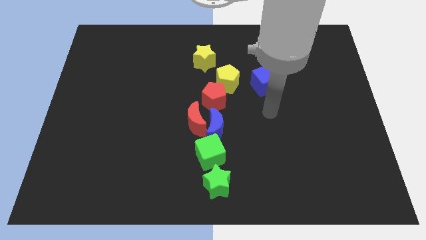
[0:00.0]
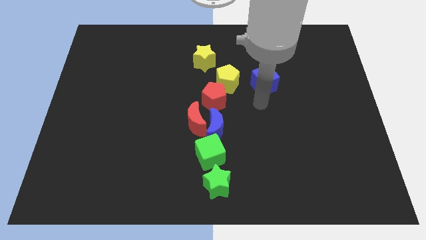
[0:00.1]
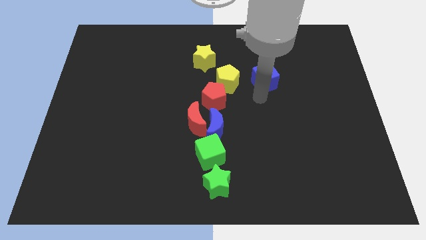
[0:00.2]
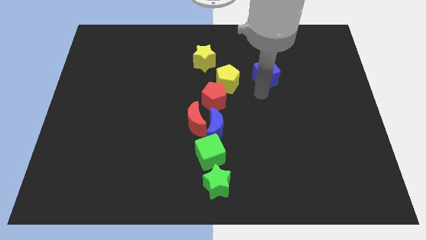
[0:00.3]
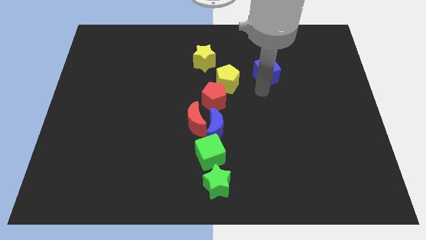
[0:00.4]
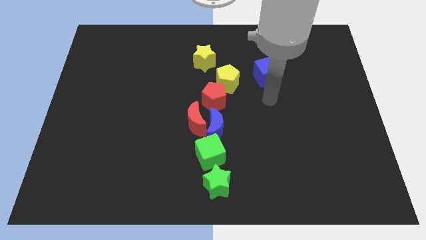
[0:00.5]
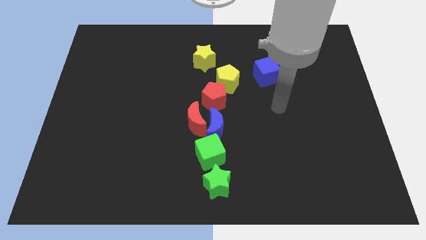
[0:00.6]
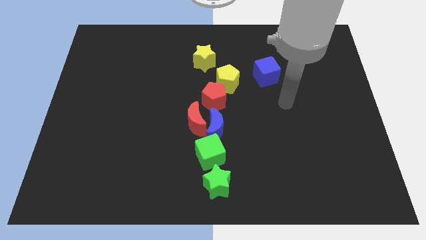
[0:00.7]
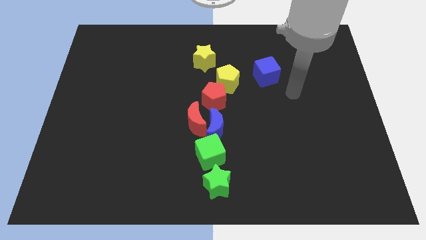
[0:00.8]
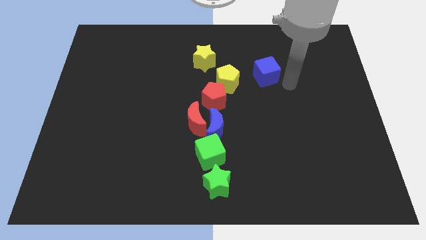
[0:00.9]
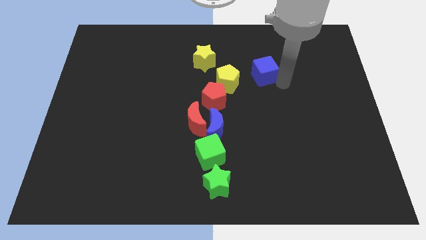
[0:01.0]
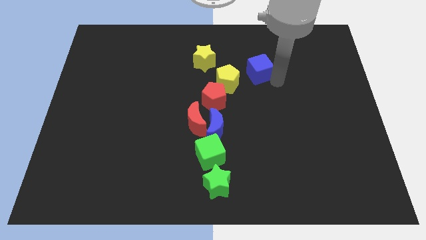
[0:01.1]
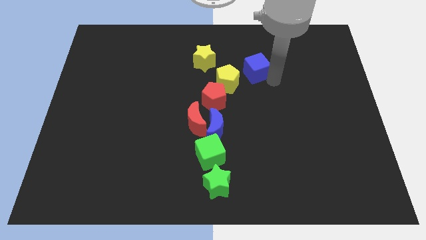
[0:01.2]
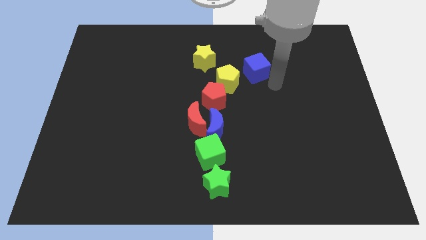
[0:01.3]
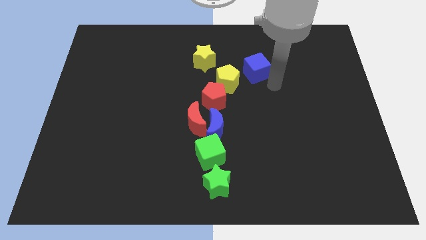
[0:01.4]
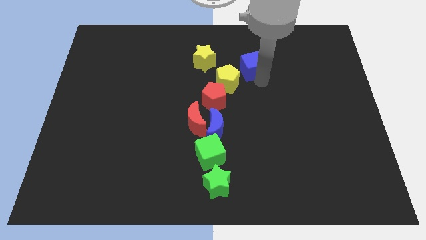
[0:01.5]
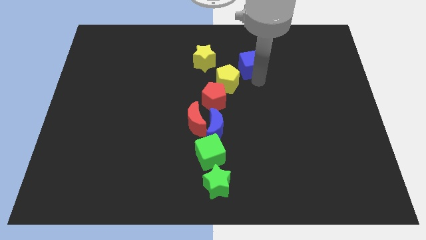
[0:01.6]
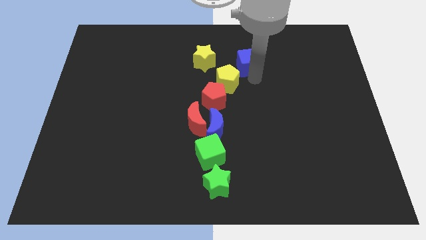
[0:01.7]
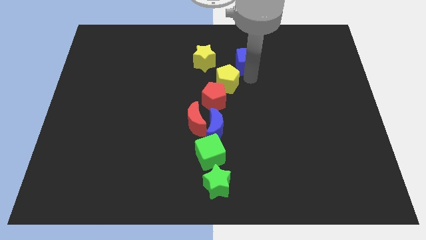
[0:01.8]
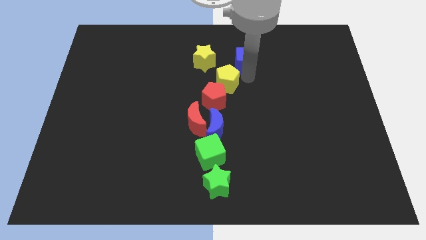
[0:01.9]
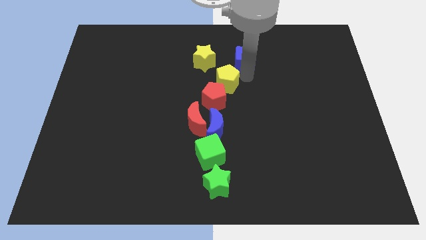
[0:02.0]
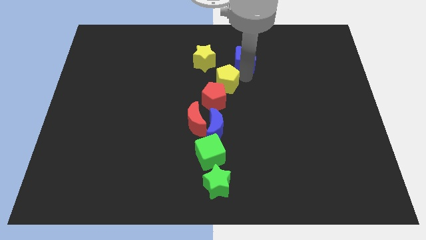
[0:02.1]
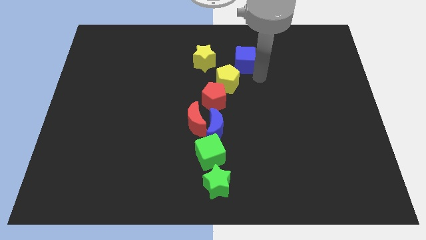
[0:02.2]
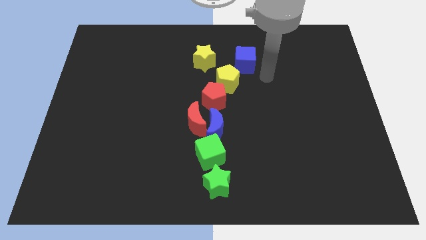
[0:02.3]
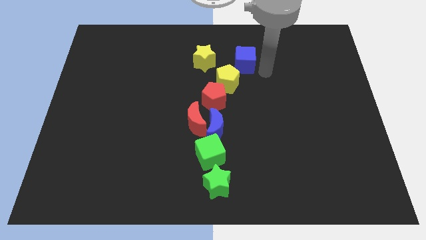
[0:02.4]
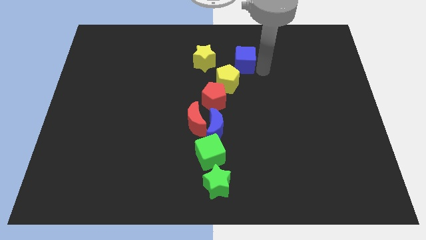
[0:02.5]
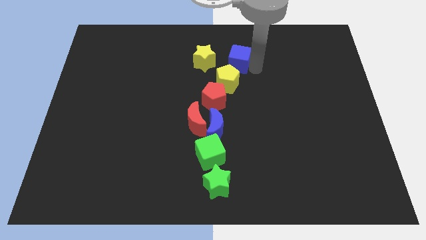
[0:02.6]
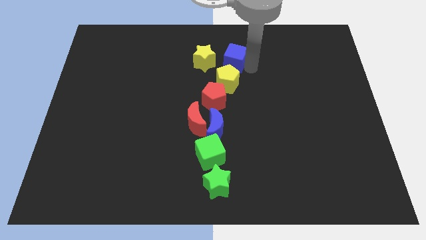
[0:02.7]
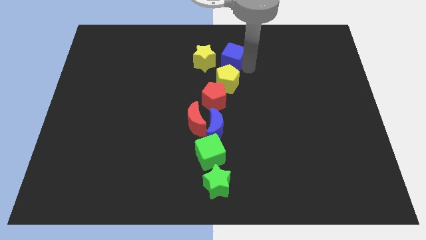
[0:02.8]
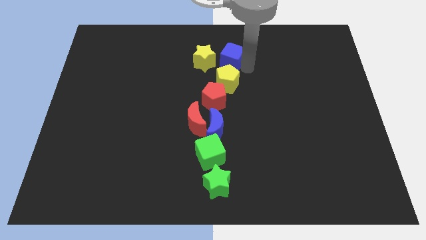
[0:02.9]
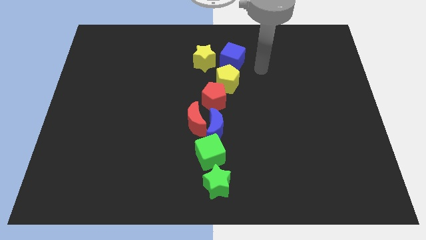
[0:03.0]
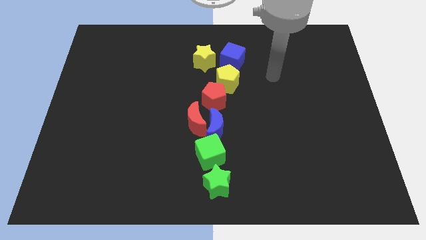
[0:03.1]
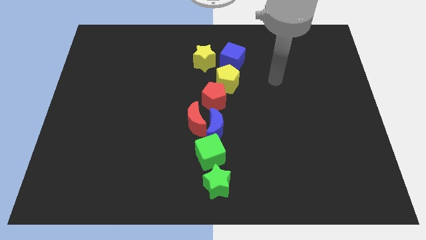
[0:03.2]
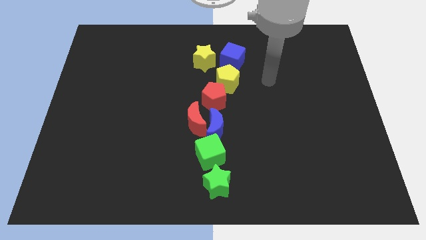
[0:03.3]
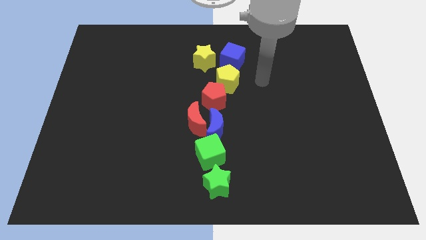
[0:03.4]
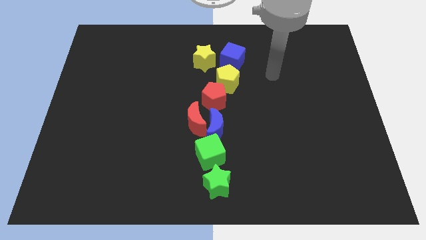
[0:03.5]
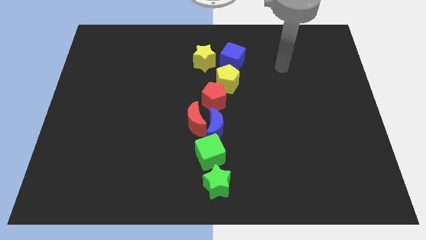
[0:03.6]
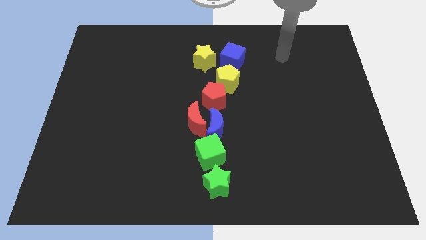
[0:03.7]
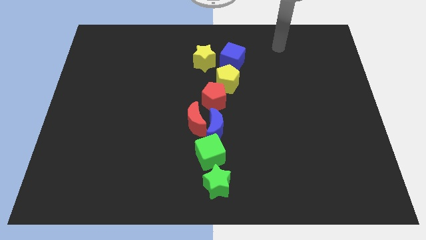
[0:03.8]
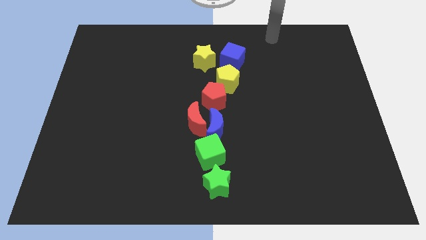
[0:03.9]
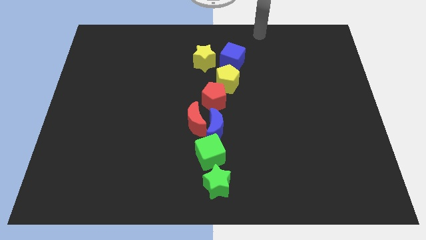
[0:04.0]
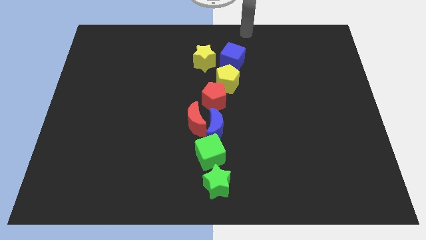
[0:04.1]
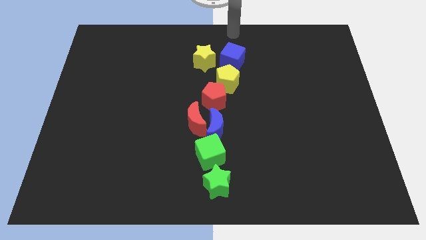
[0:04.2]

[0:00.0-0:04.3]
put the blue cube to the top side of the yellow pentagon

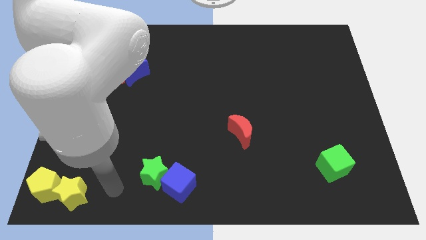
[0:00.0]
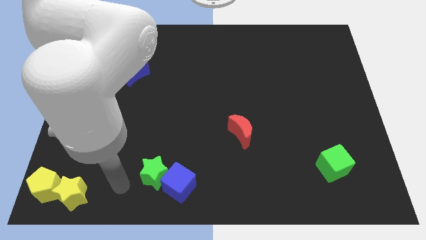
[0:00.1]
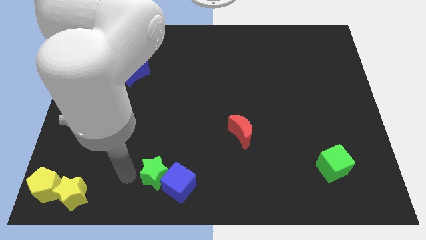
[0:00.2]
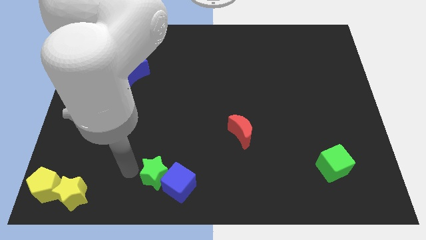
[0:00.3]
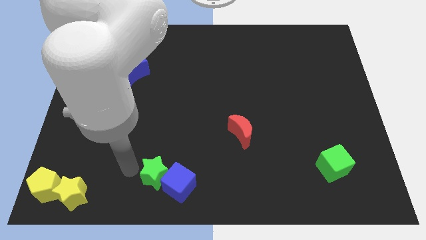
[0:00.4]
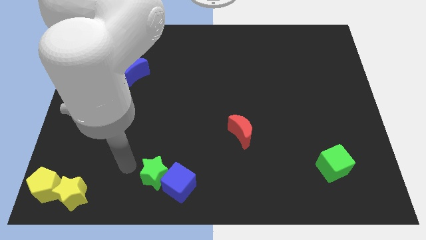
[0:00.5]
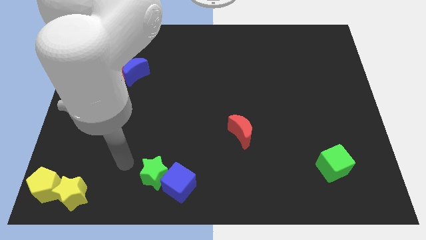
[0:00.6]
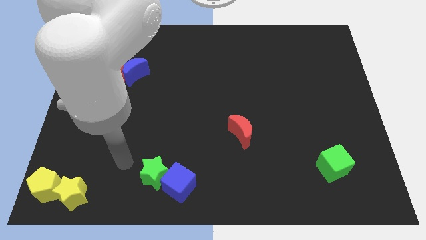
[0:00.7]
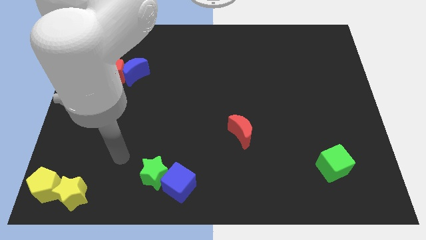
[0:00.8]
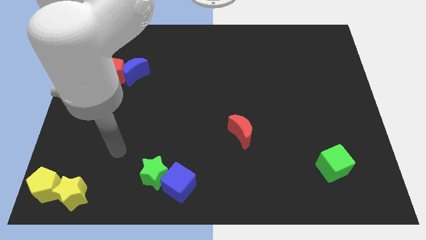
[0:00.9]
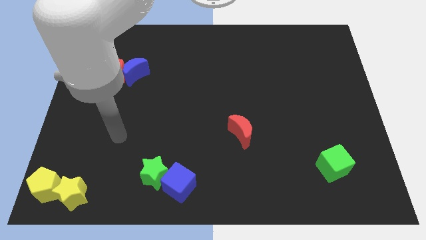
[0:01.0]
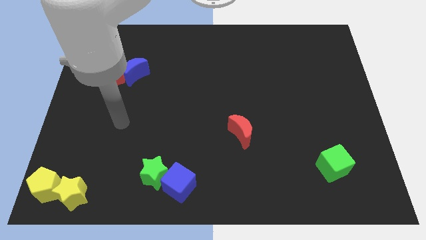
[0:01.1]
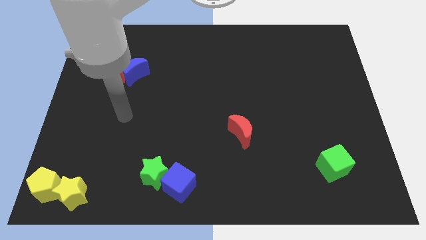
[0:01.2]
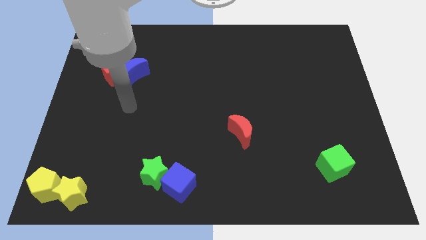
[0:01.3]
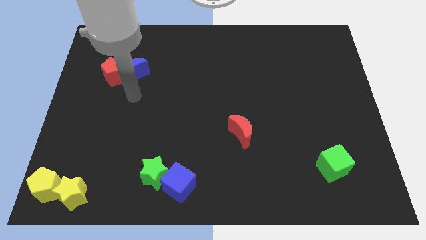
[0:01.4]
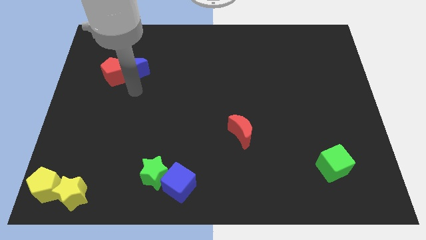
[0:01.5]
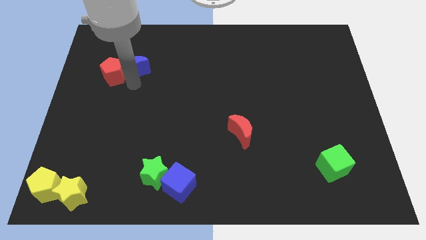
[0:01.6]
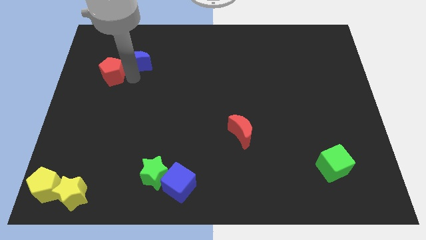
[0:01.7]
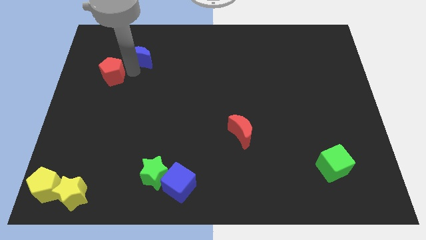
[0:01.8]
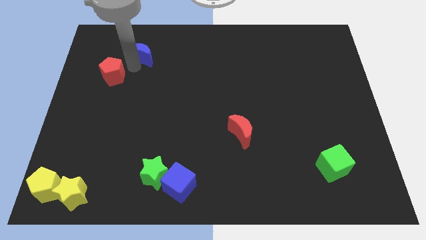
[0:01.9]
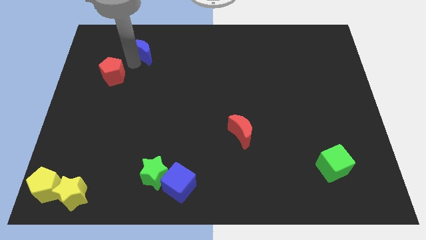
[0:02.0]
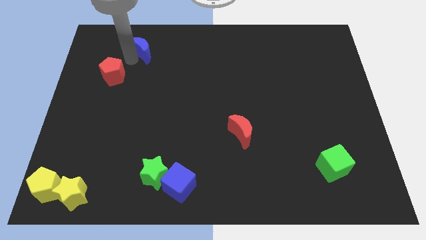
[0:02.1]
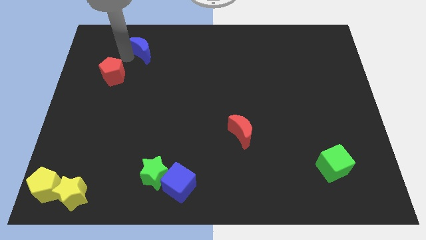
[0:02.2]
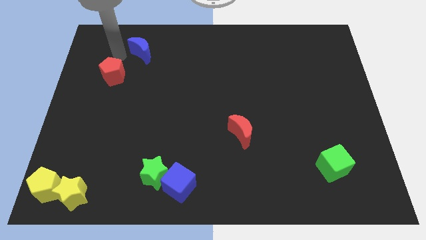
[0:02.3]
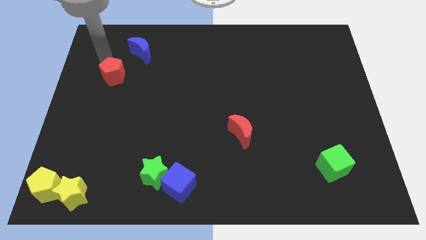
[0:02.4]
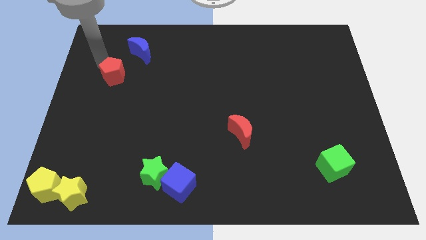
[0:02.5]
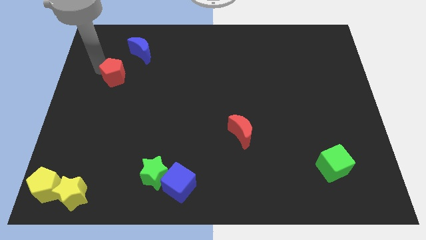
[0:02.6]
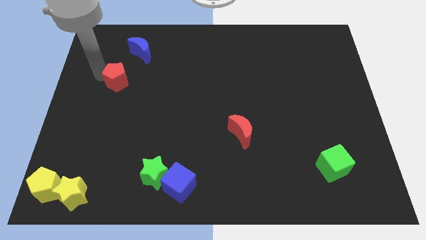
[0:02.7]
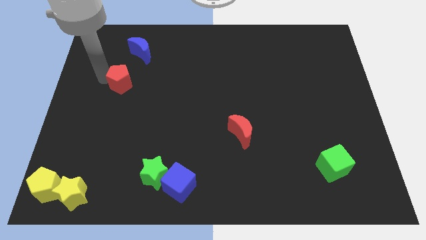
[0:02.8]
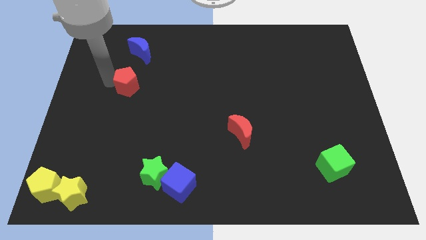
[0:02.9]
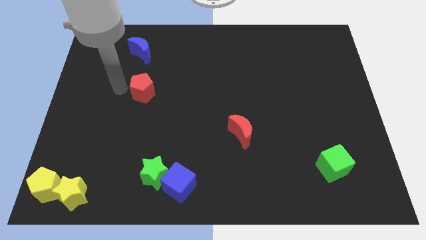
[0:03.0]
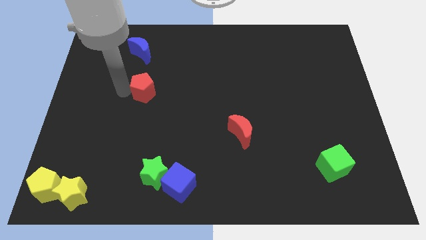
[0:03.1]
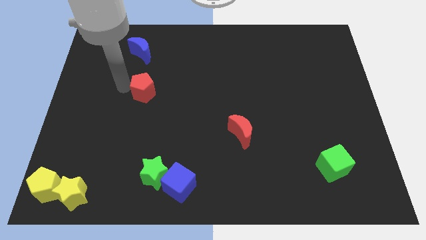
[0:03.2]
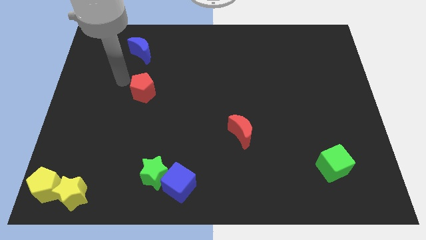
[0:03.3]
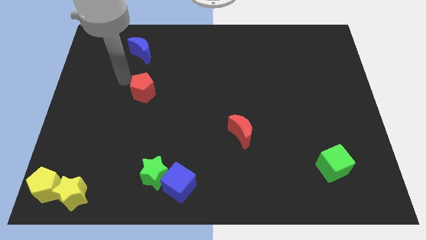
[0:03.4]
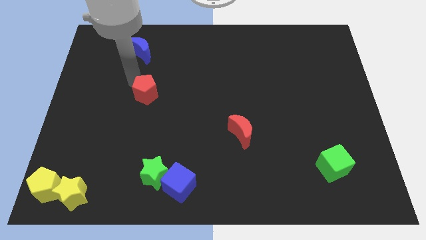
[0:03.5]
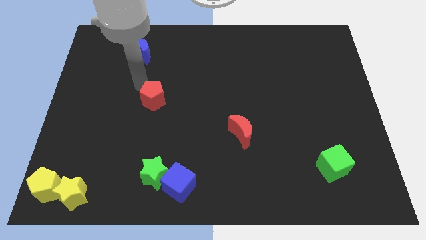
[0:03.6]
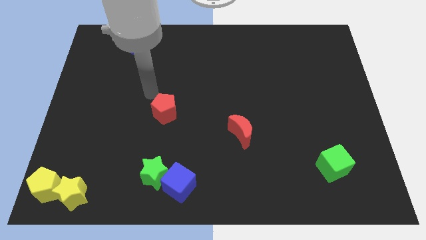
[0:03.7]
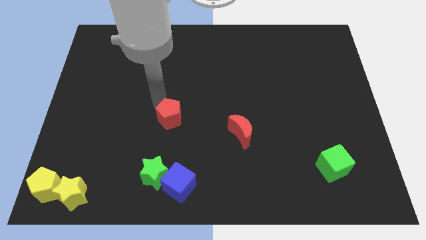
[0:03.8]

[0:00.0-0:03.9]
separate red pentagon and blue moon

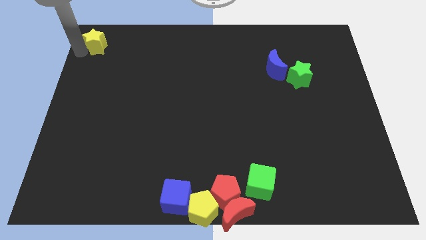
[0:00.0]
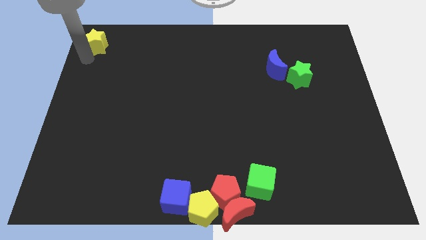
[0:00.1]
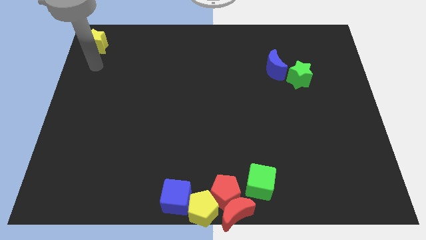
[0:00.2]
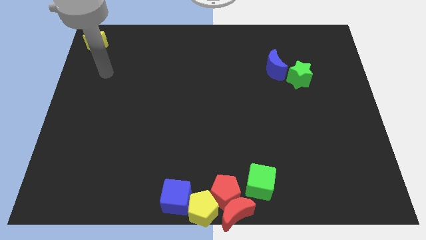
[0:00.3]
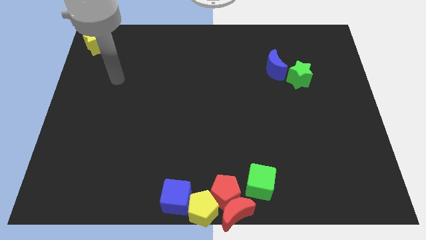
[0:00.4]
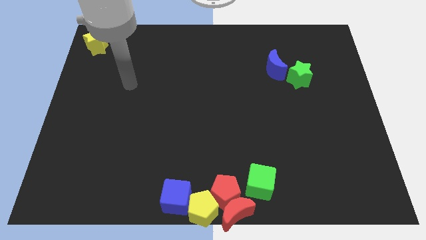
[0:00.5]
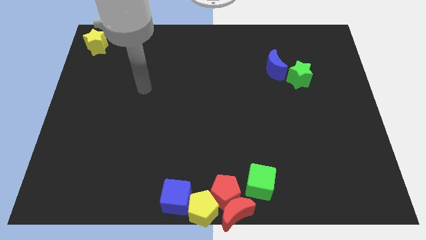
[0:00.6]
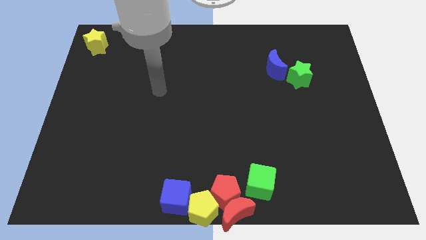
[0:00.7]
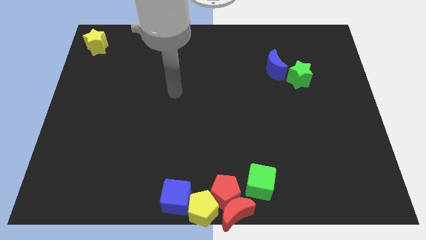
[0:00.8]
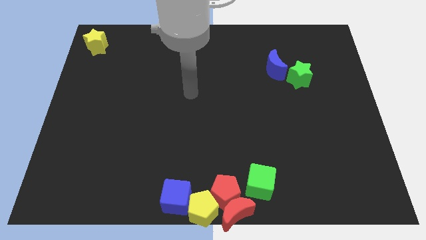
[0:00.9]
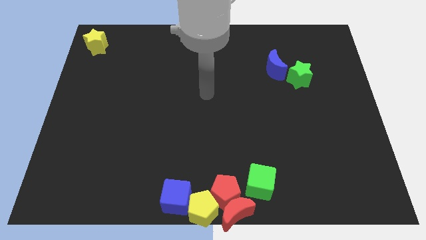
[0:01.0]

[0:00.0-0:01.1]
move your arm away from yellow star
